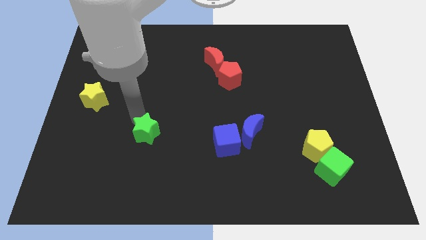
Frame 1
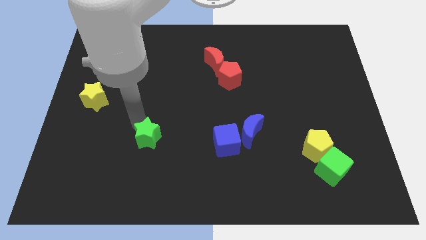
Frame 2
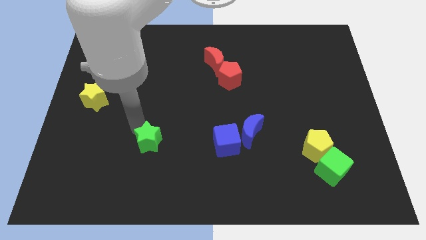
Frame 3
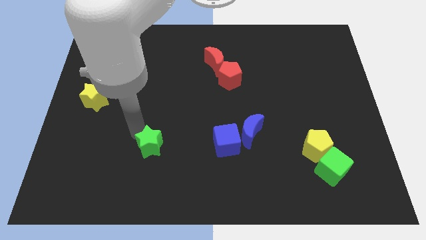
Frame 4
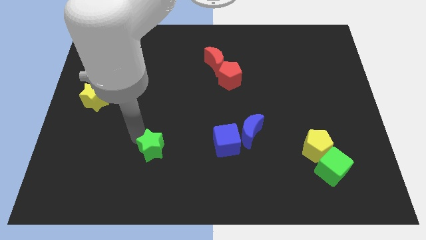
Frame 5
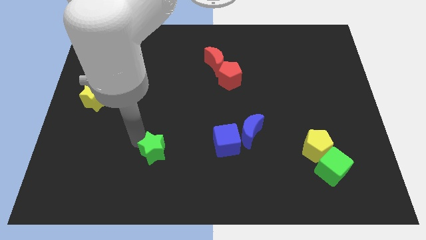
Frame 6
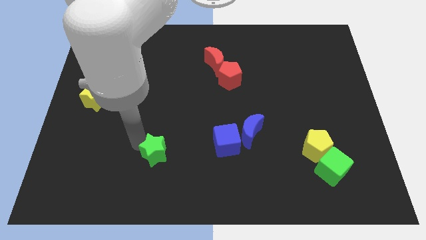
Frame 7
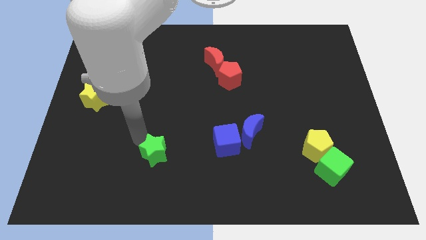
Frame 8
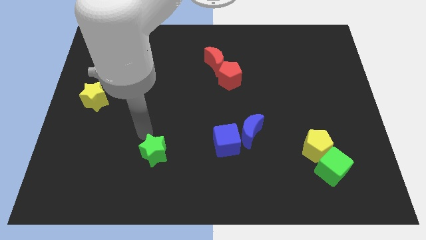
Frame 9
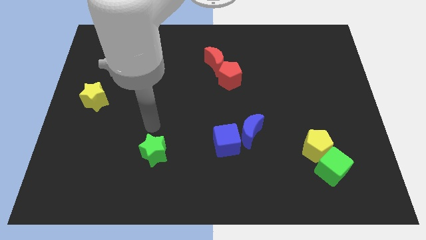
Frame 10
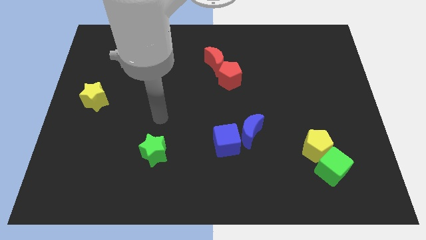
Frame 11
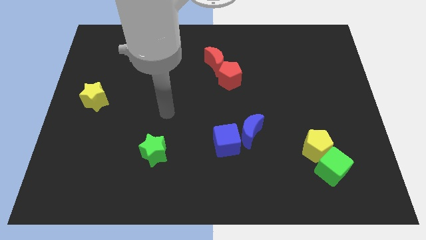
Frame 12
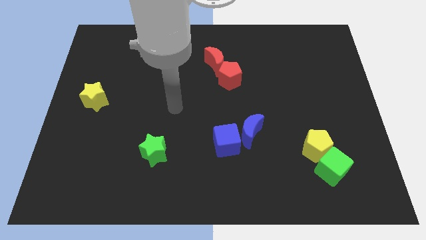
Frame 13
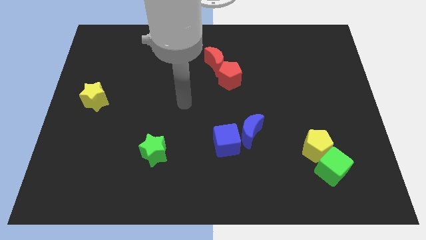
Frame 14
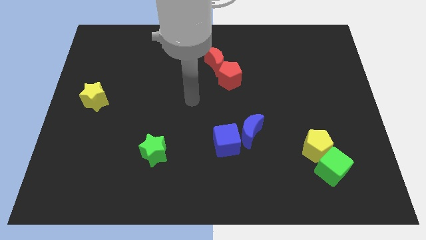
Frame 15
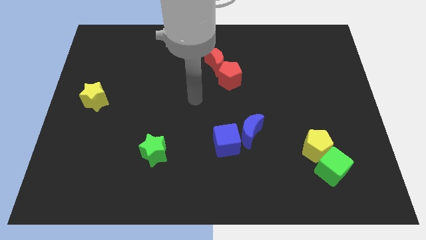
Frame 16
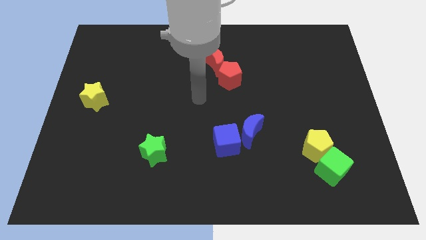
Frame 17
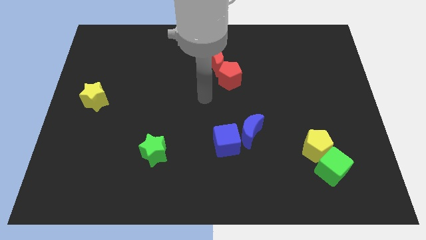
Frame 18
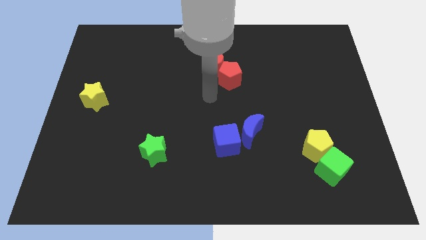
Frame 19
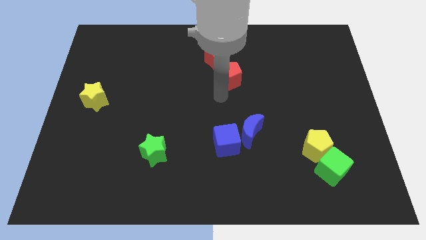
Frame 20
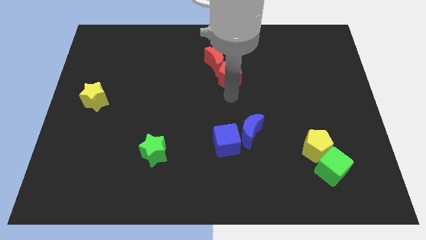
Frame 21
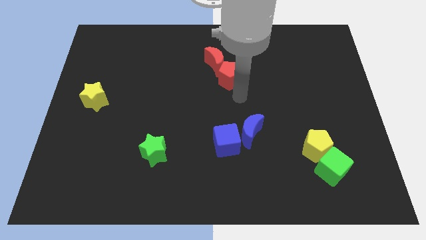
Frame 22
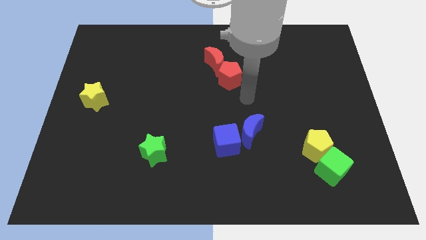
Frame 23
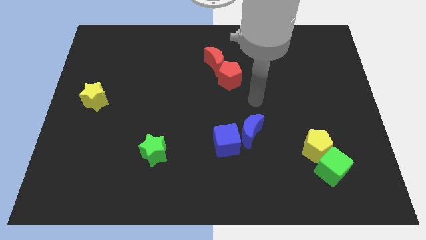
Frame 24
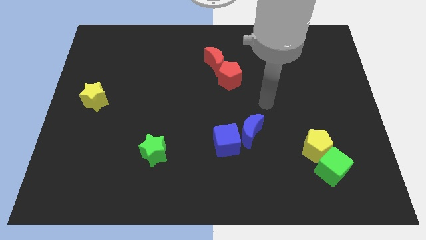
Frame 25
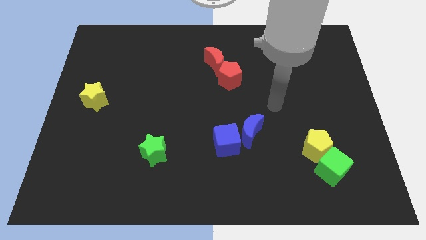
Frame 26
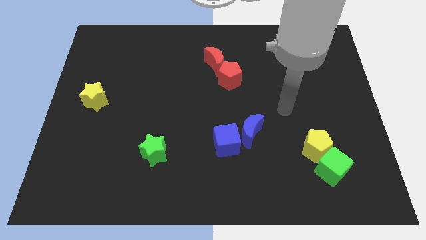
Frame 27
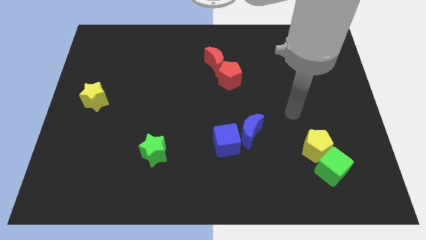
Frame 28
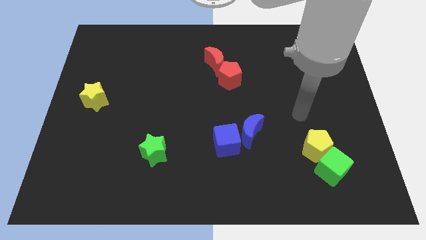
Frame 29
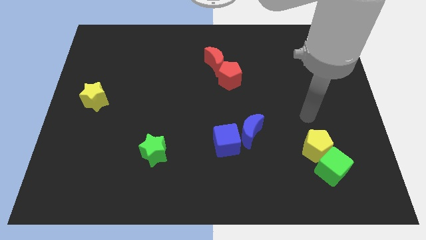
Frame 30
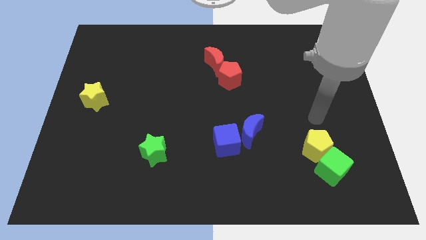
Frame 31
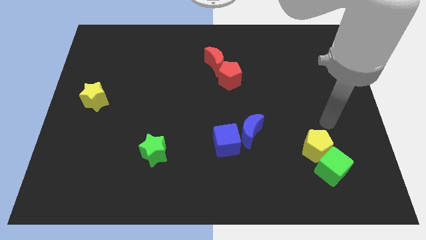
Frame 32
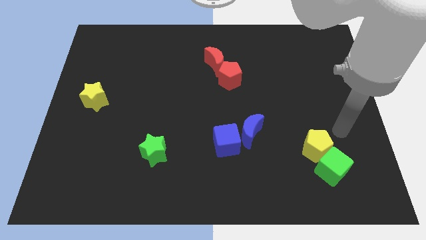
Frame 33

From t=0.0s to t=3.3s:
adjust the green star horizontally left to the blue cube

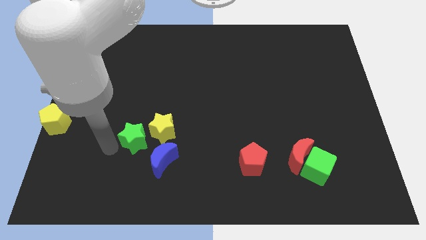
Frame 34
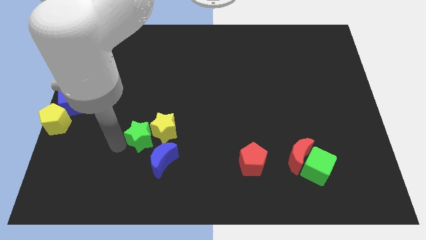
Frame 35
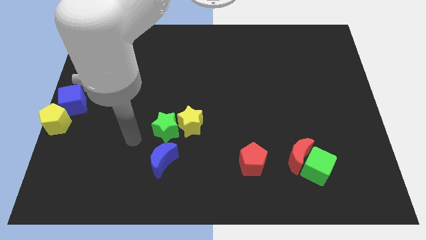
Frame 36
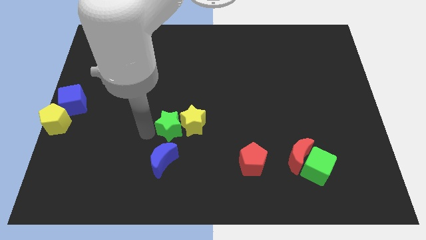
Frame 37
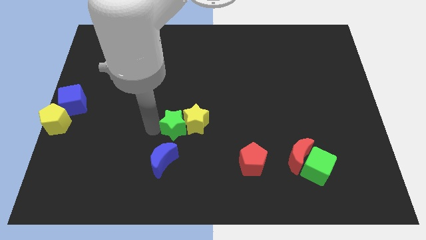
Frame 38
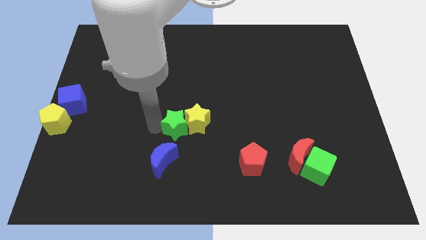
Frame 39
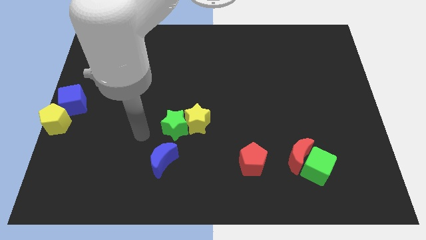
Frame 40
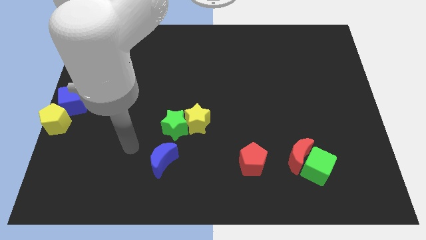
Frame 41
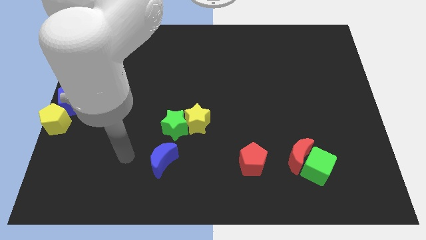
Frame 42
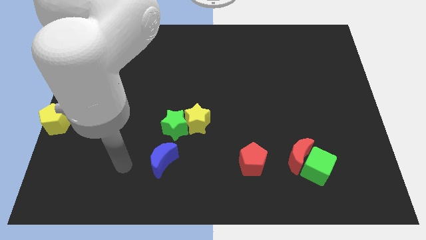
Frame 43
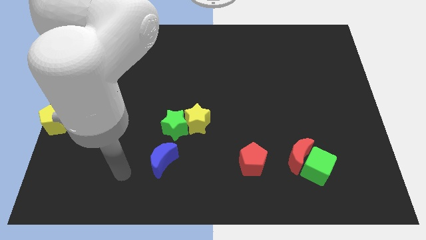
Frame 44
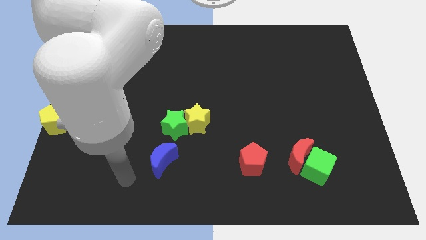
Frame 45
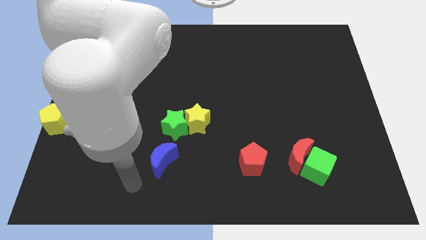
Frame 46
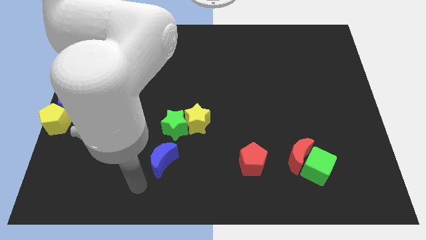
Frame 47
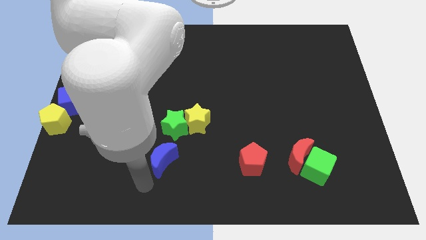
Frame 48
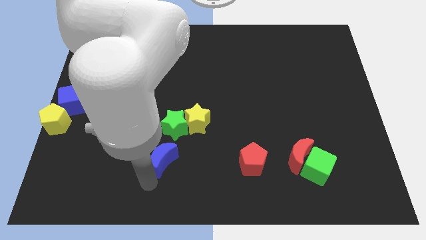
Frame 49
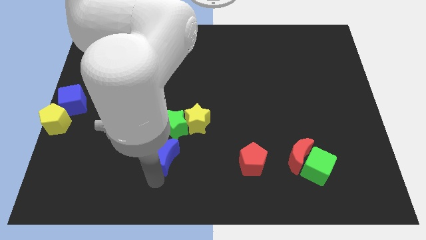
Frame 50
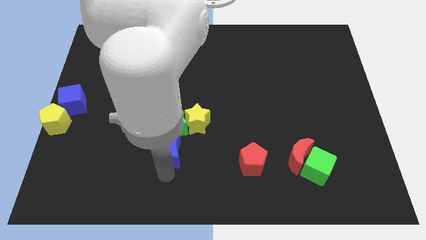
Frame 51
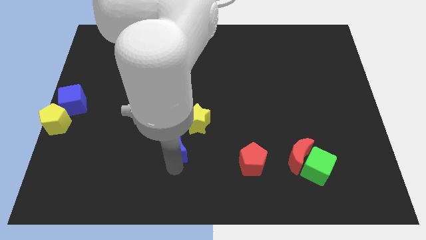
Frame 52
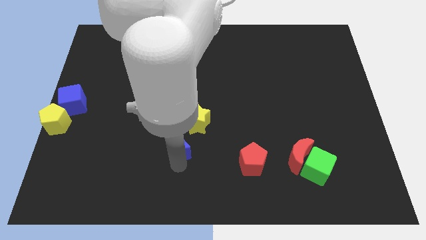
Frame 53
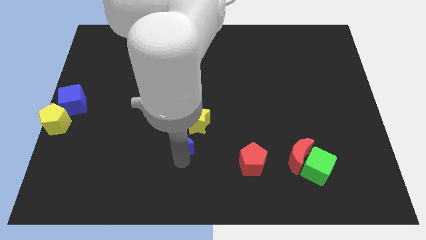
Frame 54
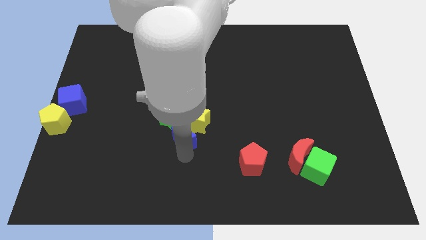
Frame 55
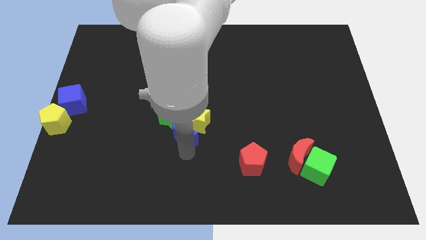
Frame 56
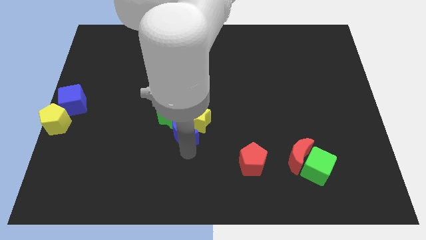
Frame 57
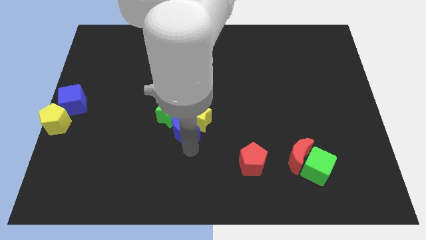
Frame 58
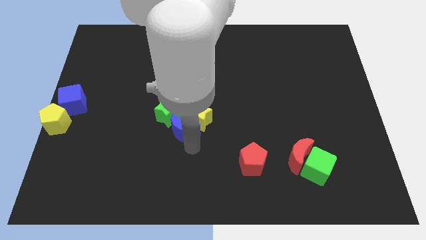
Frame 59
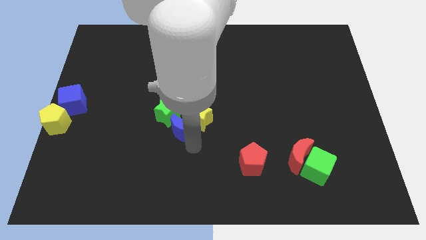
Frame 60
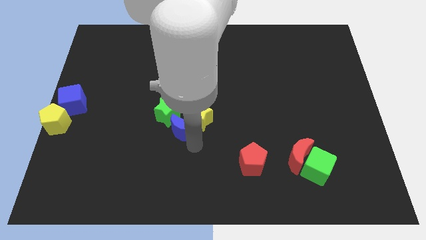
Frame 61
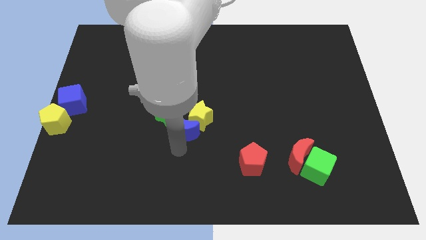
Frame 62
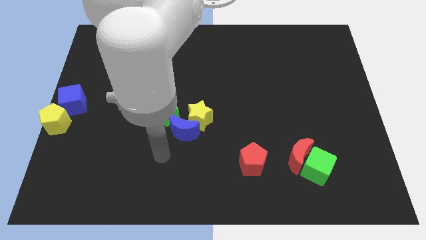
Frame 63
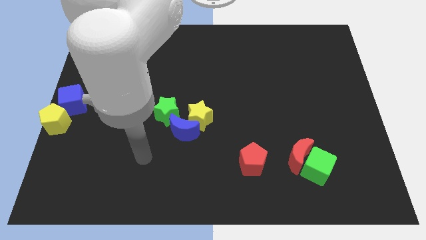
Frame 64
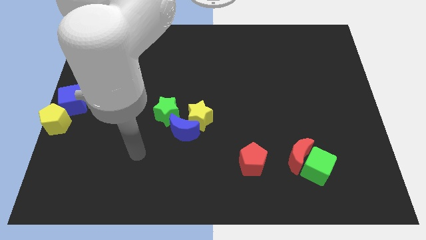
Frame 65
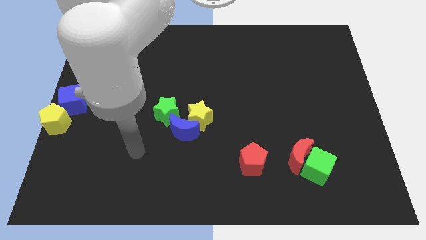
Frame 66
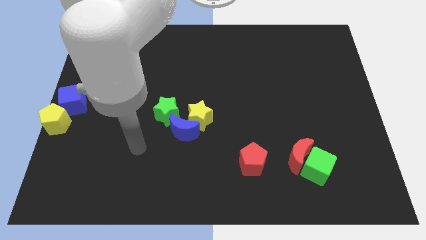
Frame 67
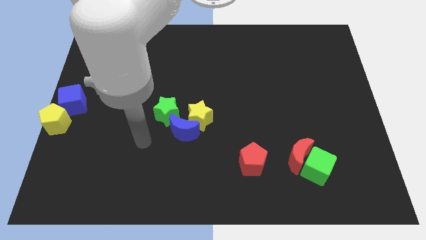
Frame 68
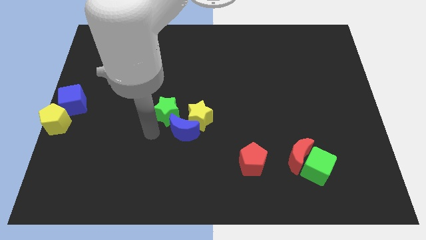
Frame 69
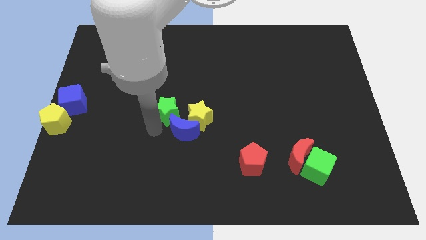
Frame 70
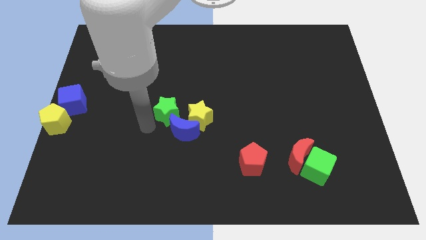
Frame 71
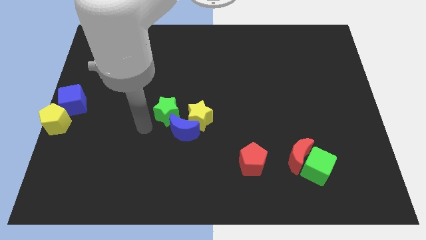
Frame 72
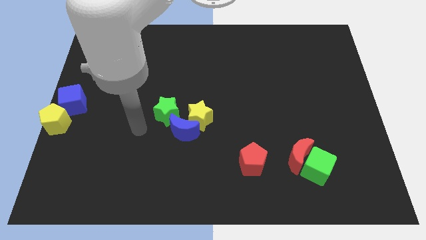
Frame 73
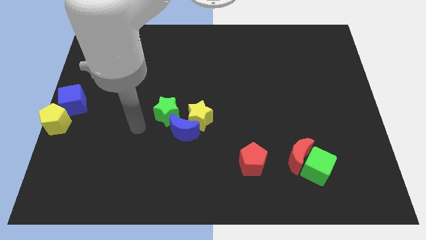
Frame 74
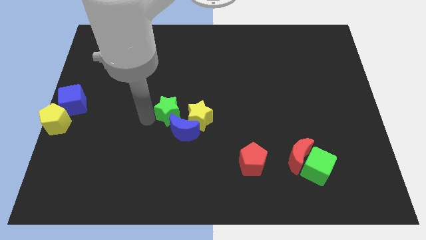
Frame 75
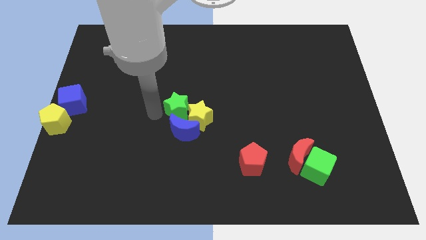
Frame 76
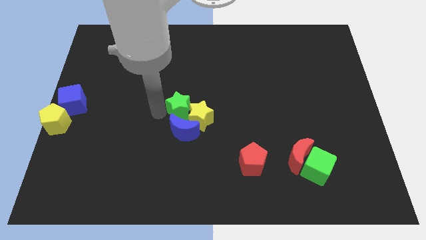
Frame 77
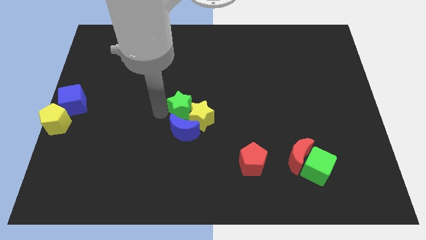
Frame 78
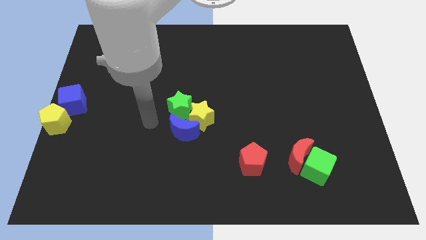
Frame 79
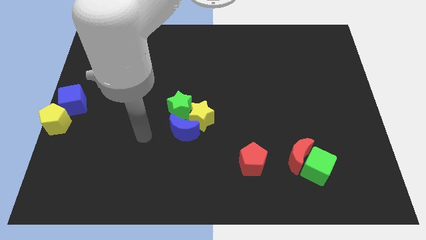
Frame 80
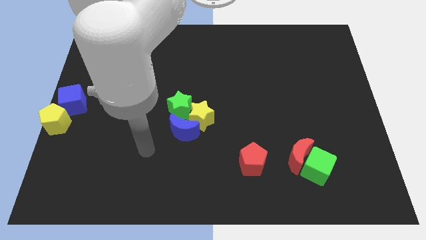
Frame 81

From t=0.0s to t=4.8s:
make a group of block with green and yellow stars and blue crescent at center

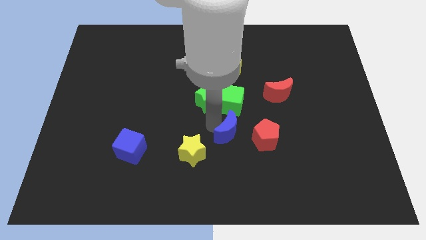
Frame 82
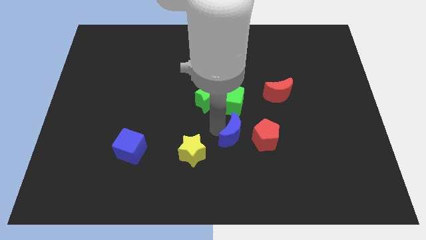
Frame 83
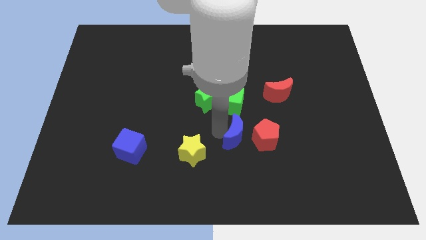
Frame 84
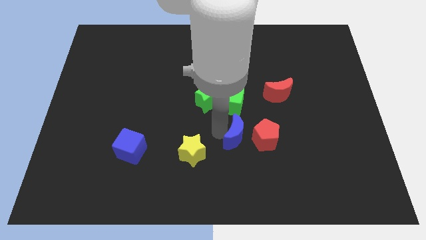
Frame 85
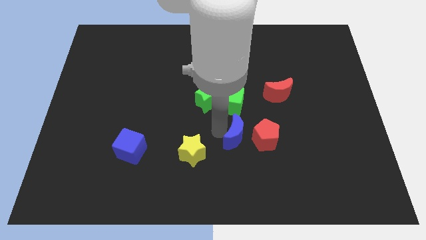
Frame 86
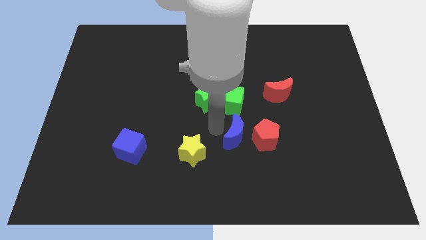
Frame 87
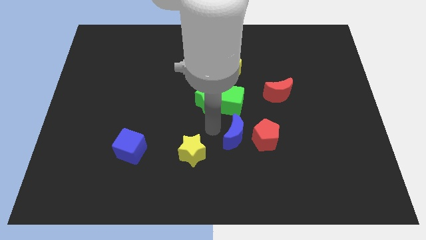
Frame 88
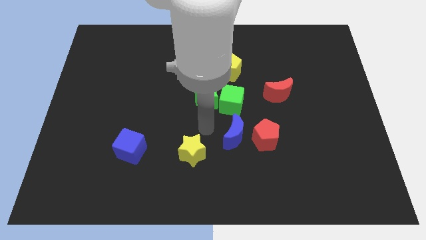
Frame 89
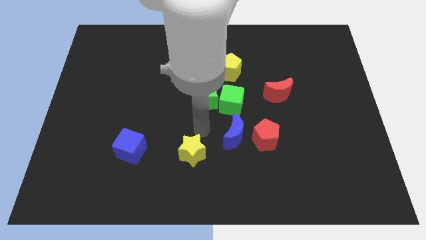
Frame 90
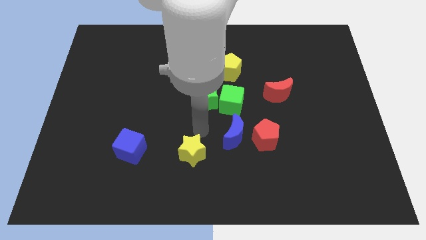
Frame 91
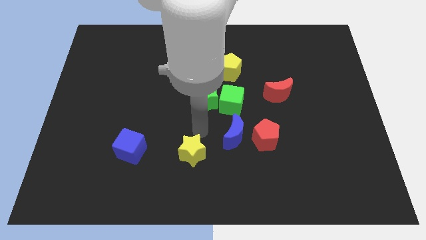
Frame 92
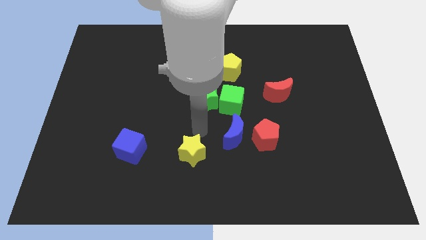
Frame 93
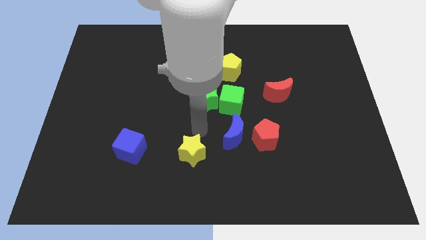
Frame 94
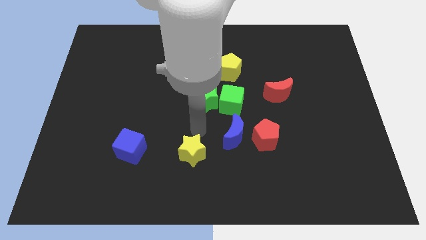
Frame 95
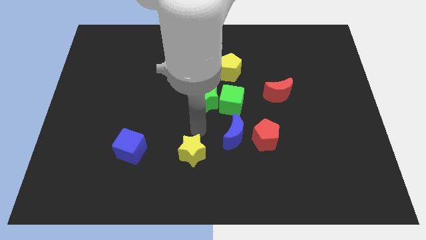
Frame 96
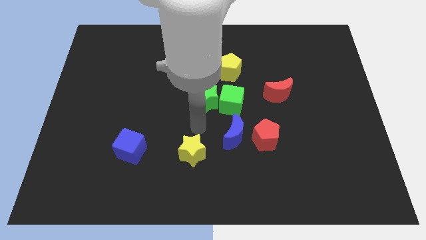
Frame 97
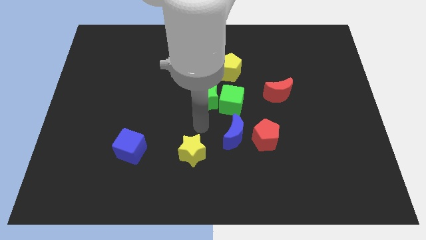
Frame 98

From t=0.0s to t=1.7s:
move the blue cube to the bottom of the green cube
